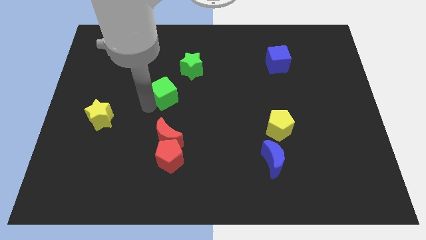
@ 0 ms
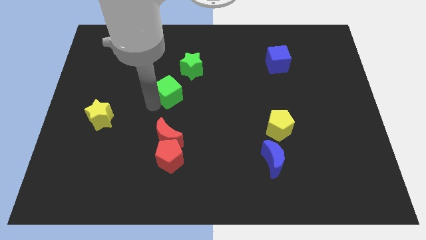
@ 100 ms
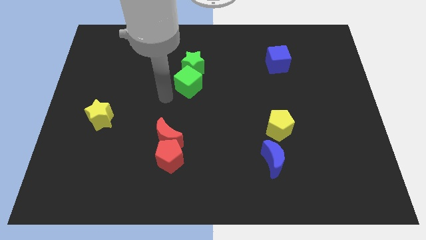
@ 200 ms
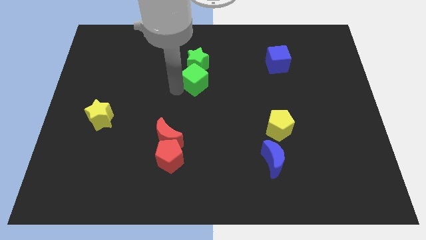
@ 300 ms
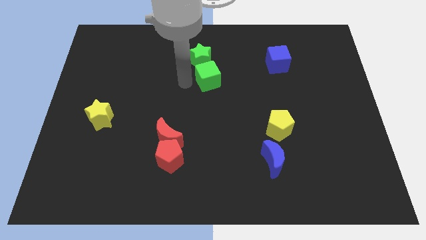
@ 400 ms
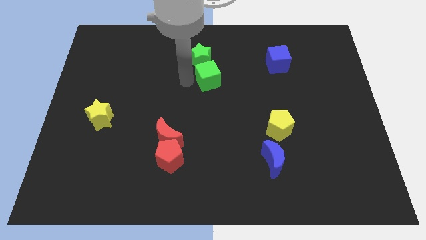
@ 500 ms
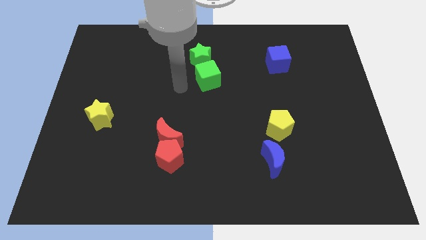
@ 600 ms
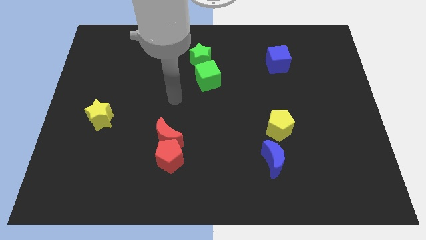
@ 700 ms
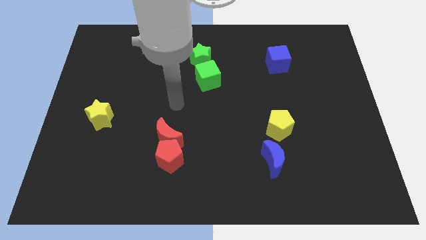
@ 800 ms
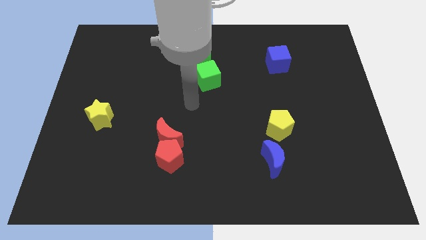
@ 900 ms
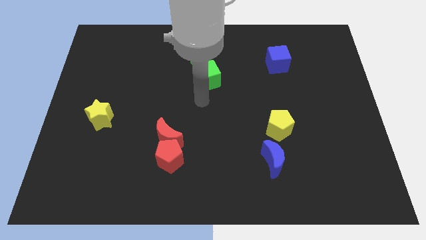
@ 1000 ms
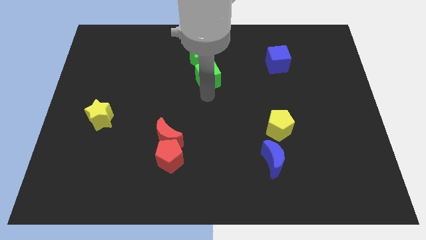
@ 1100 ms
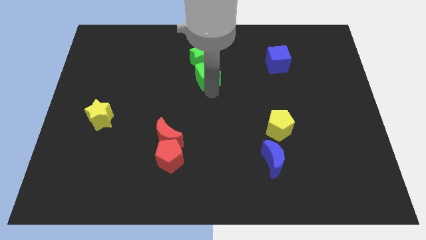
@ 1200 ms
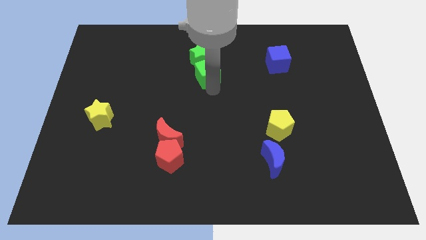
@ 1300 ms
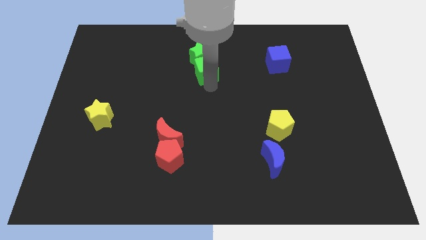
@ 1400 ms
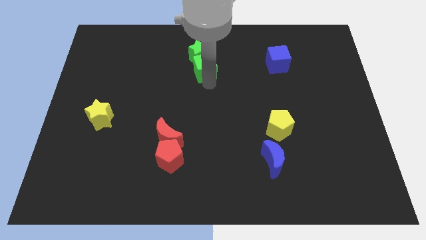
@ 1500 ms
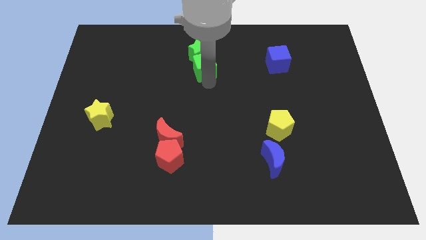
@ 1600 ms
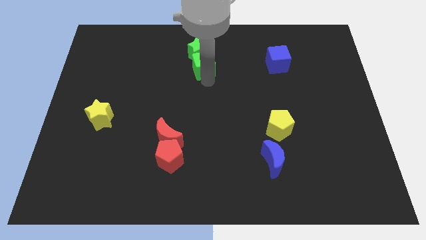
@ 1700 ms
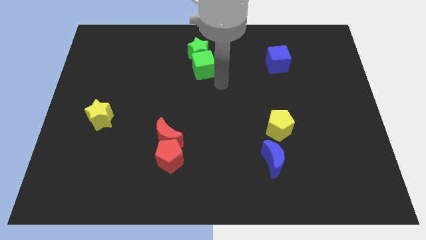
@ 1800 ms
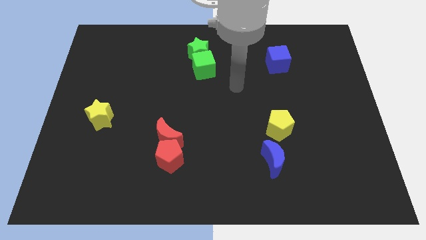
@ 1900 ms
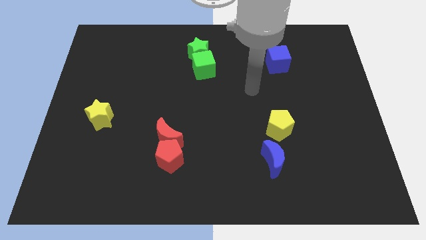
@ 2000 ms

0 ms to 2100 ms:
push the green cube close to green star

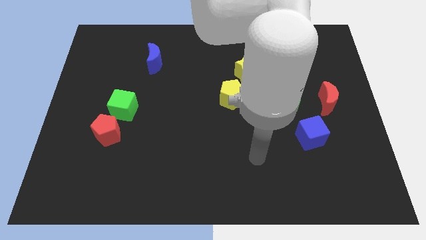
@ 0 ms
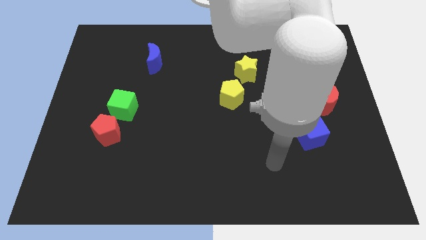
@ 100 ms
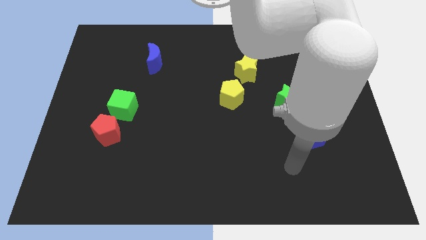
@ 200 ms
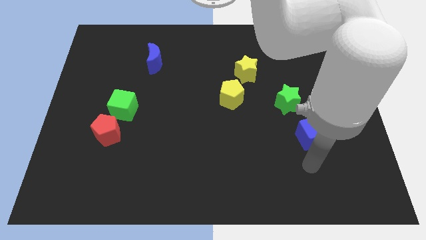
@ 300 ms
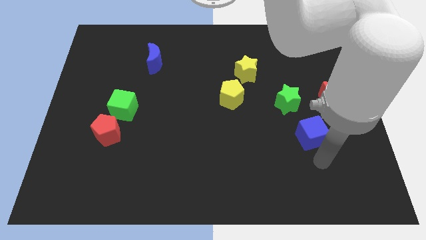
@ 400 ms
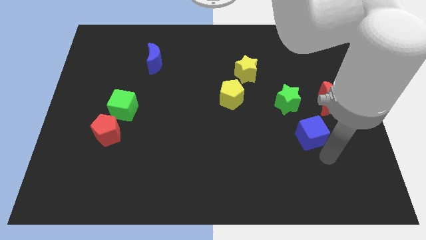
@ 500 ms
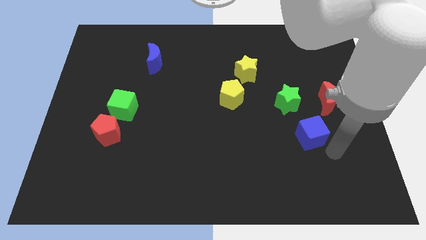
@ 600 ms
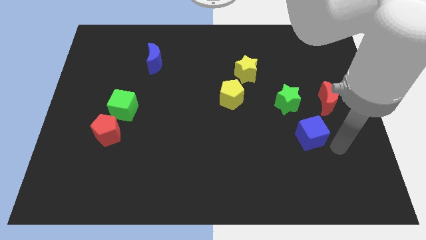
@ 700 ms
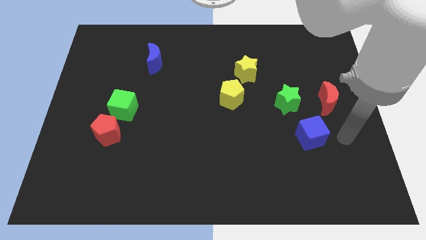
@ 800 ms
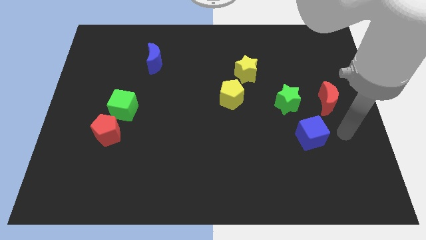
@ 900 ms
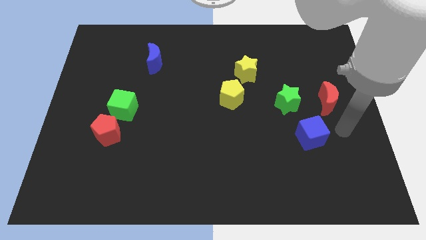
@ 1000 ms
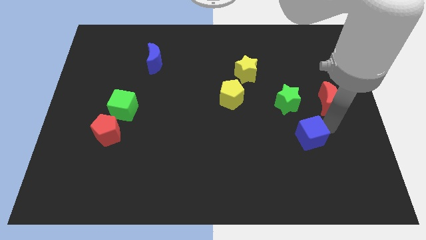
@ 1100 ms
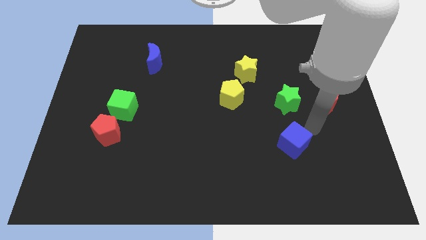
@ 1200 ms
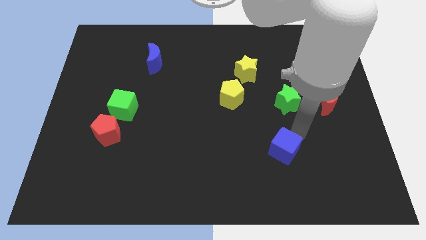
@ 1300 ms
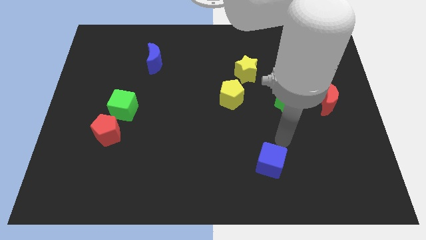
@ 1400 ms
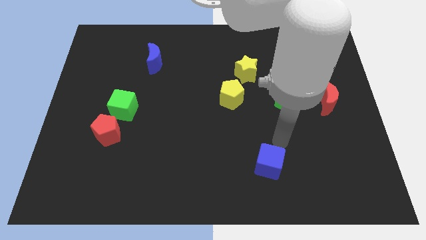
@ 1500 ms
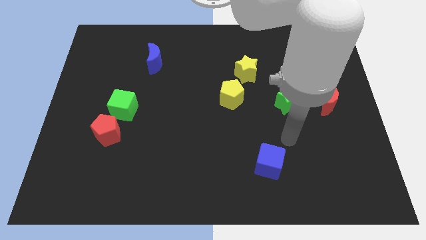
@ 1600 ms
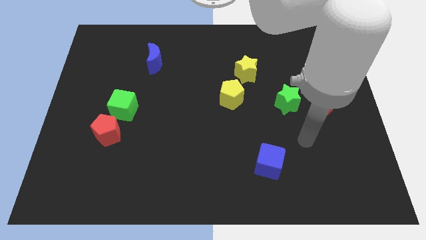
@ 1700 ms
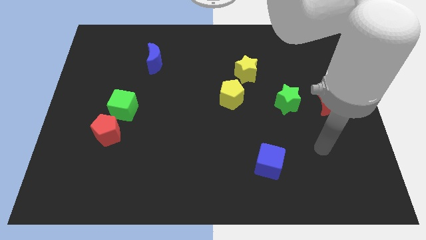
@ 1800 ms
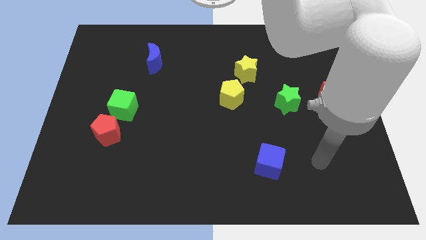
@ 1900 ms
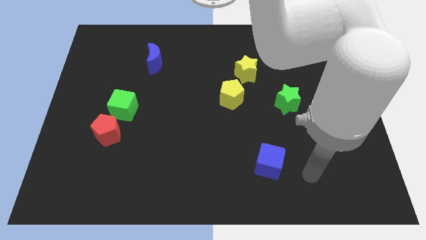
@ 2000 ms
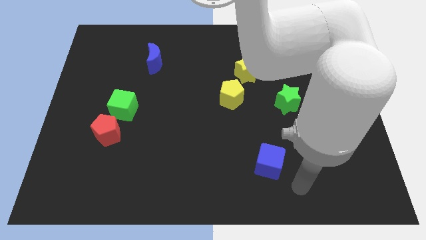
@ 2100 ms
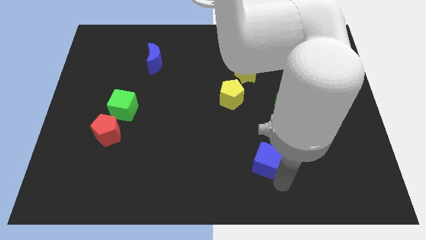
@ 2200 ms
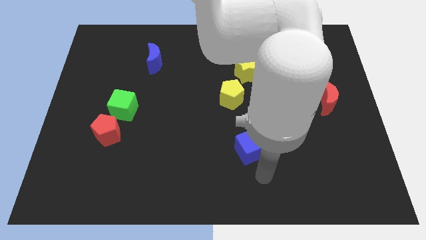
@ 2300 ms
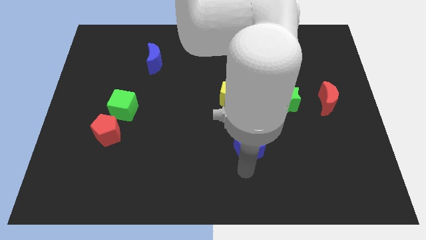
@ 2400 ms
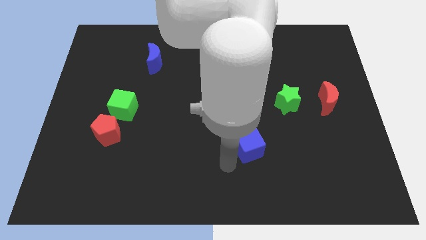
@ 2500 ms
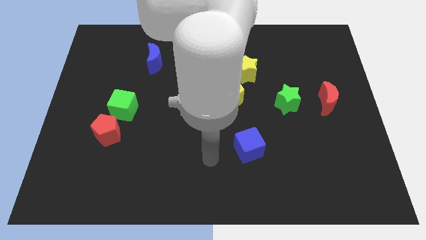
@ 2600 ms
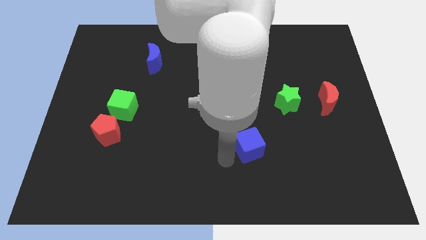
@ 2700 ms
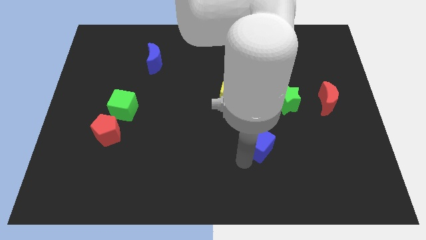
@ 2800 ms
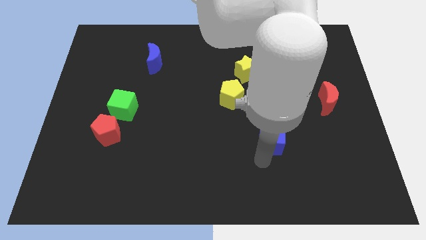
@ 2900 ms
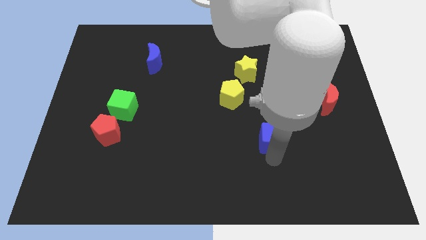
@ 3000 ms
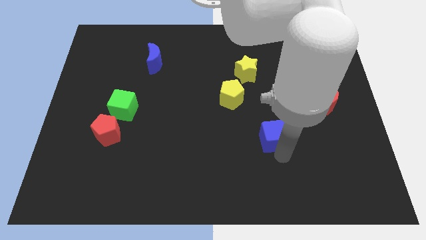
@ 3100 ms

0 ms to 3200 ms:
slide the blue cube diagonally bottom left to the green star

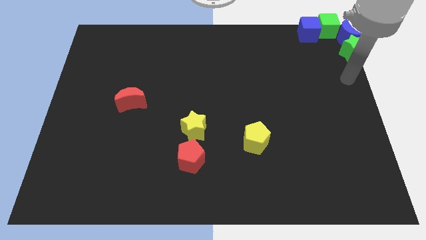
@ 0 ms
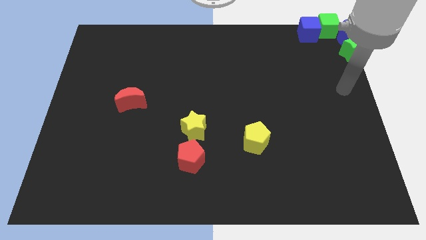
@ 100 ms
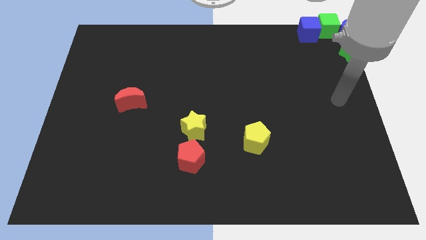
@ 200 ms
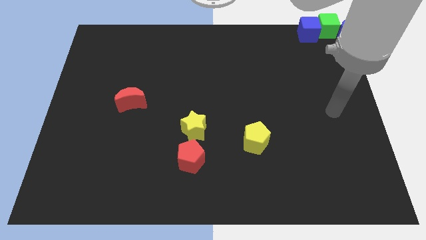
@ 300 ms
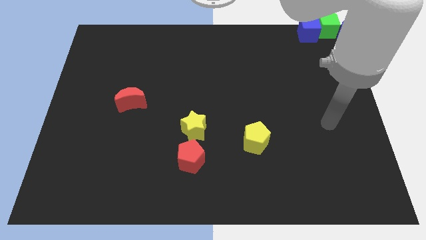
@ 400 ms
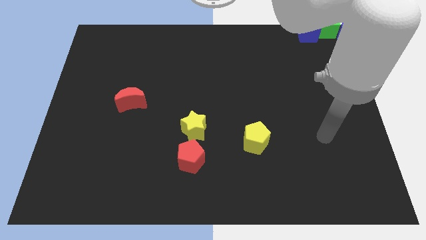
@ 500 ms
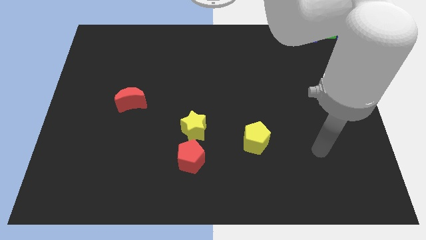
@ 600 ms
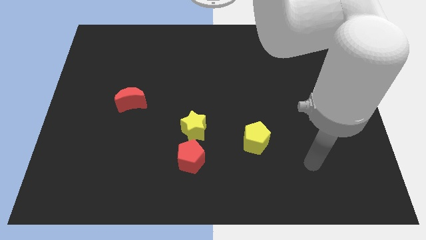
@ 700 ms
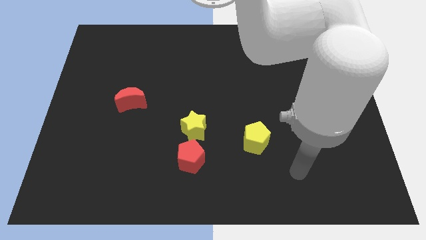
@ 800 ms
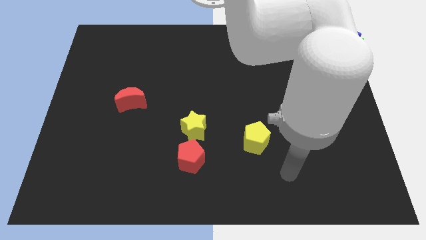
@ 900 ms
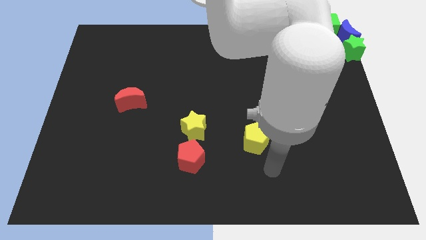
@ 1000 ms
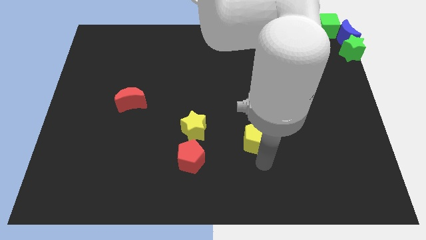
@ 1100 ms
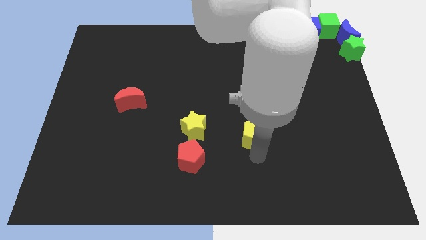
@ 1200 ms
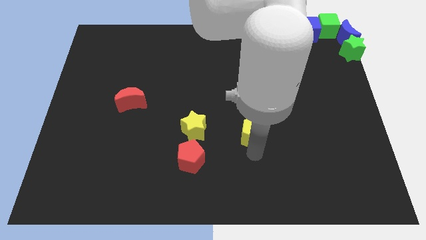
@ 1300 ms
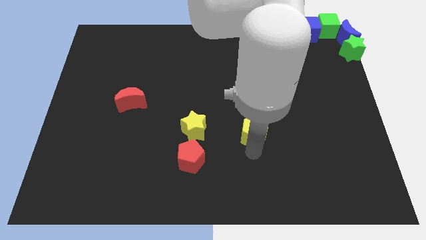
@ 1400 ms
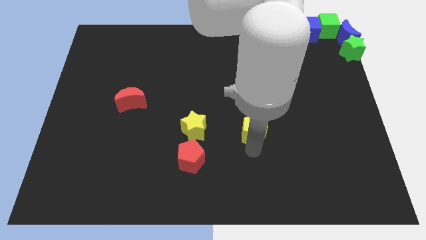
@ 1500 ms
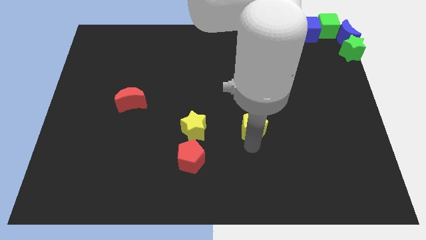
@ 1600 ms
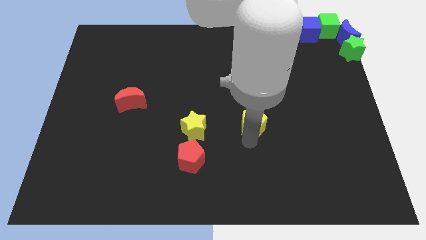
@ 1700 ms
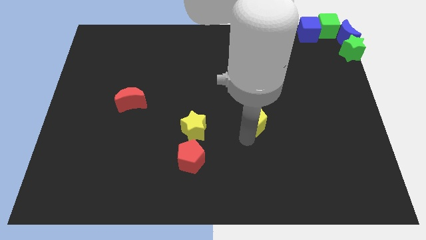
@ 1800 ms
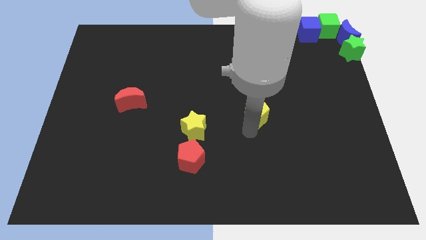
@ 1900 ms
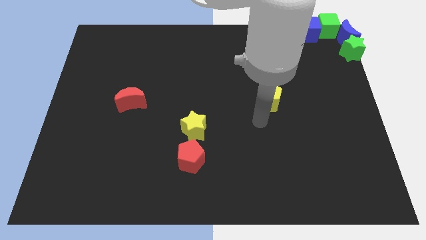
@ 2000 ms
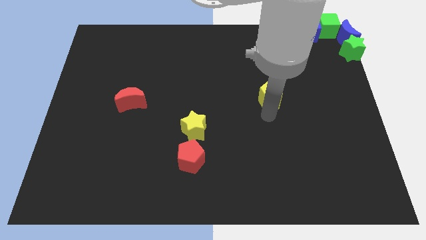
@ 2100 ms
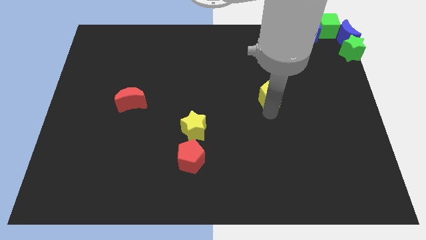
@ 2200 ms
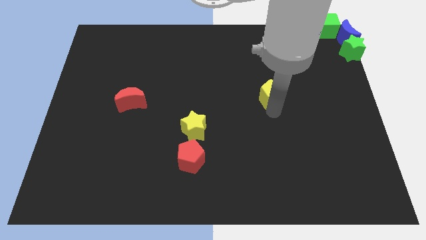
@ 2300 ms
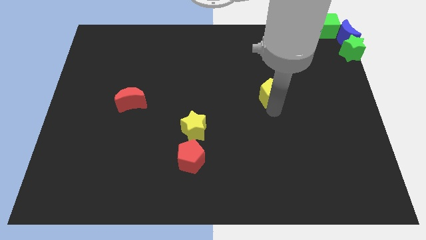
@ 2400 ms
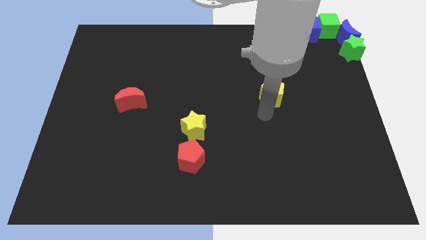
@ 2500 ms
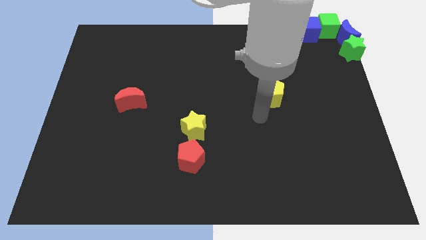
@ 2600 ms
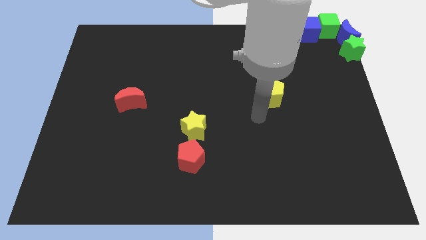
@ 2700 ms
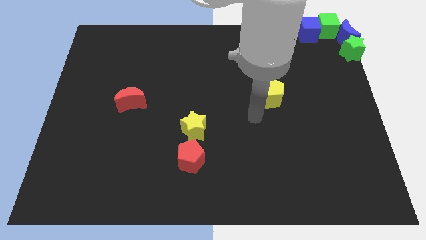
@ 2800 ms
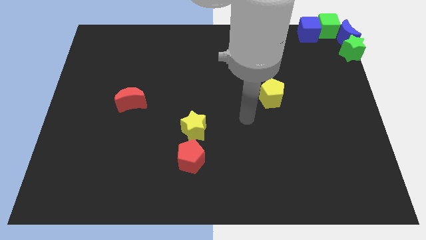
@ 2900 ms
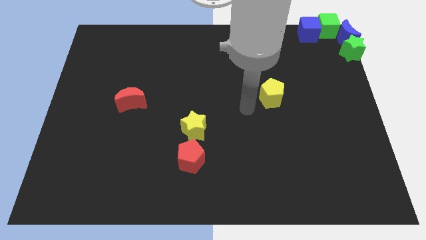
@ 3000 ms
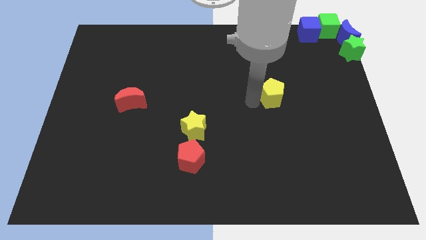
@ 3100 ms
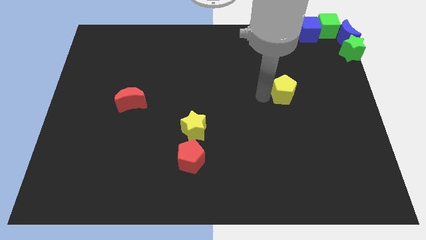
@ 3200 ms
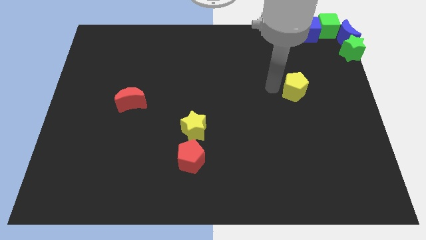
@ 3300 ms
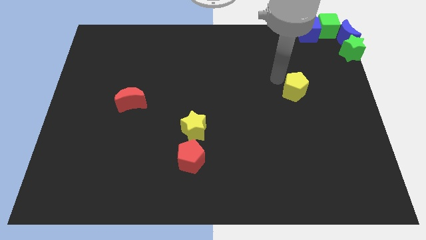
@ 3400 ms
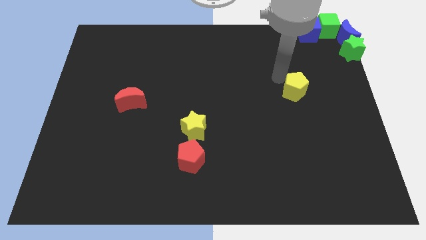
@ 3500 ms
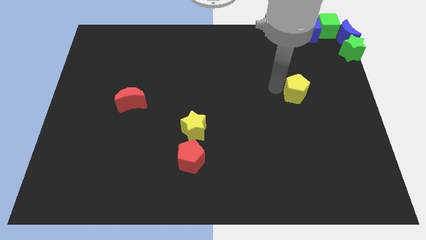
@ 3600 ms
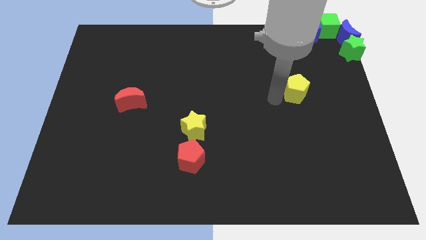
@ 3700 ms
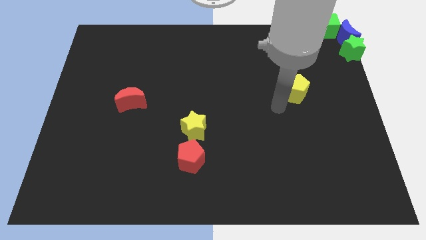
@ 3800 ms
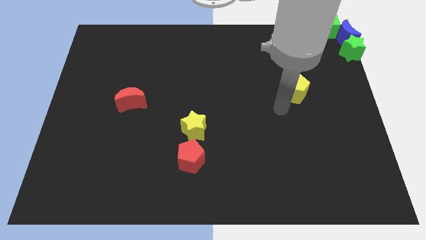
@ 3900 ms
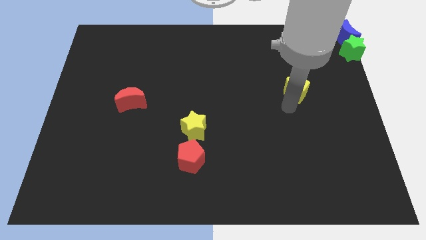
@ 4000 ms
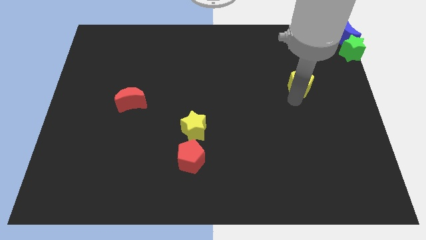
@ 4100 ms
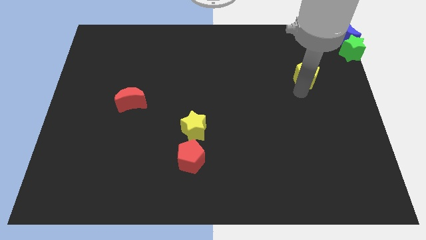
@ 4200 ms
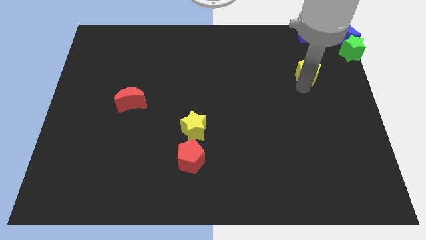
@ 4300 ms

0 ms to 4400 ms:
put the yellow pentagon diagonally in between the green star and yellow star
